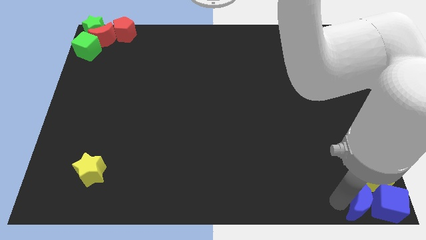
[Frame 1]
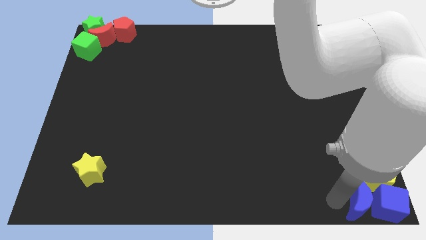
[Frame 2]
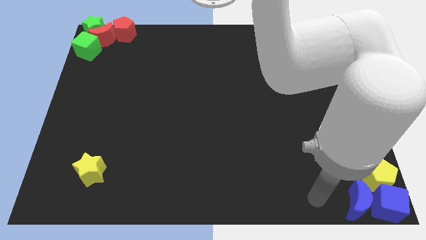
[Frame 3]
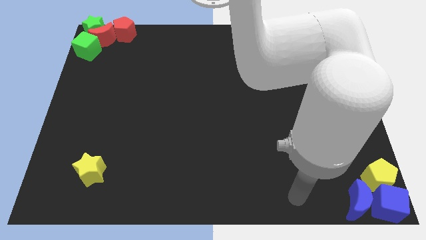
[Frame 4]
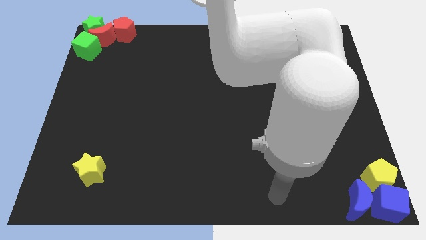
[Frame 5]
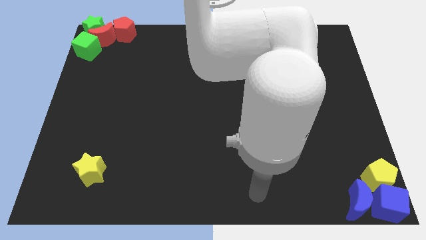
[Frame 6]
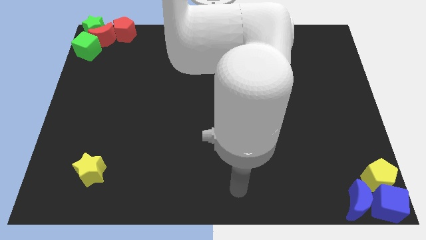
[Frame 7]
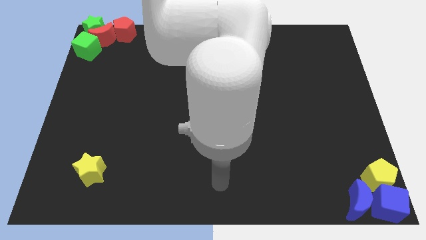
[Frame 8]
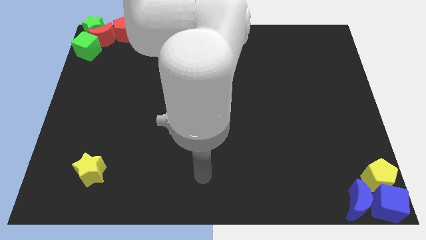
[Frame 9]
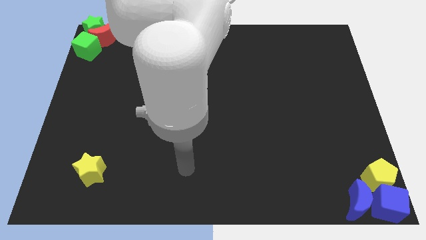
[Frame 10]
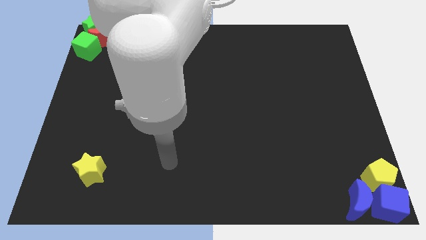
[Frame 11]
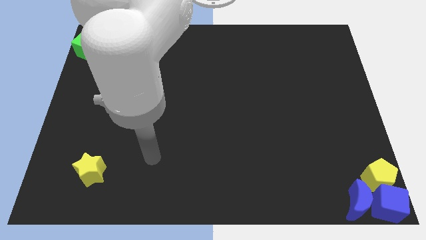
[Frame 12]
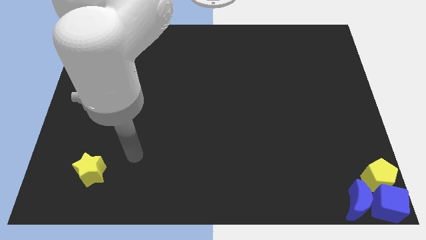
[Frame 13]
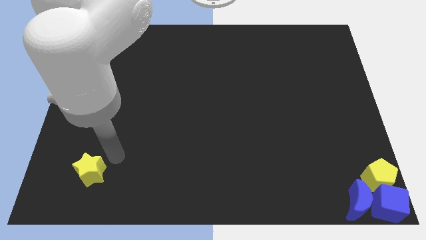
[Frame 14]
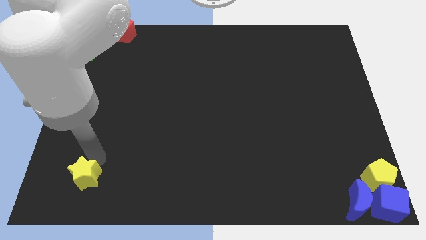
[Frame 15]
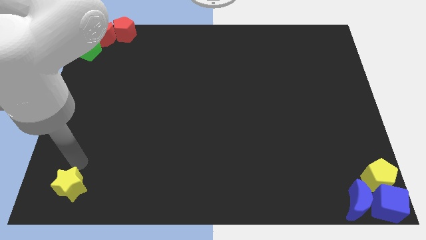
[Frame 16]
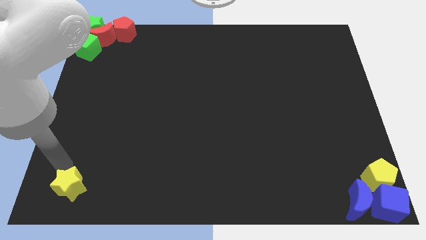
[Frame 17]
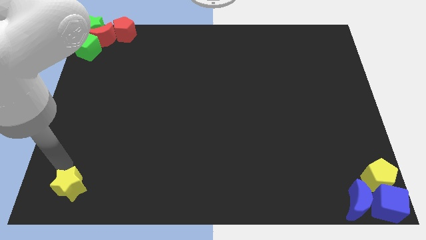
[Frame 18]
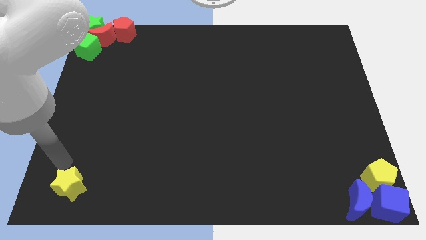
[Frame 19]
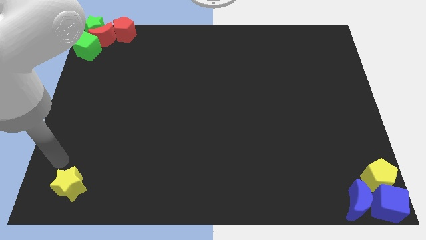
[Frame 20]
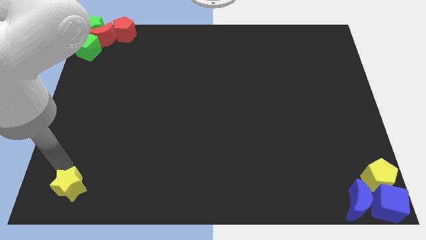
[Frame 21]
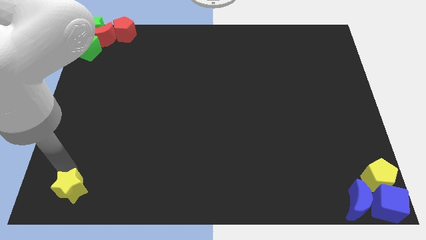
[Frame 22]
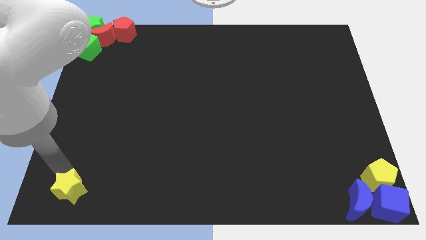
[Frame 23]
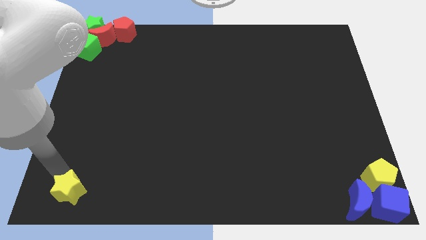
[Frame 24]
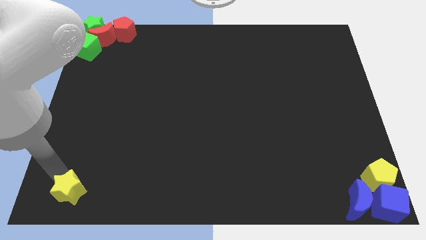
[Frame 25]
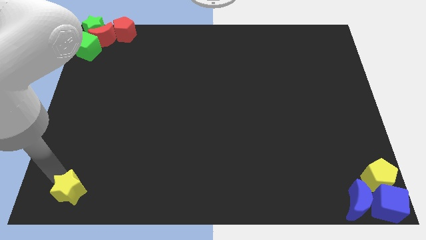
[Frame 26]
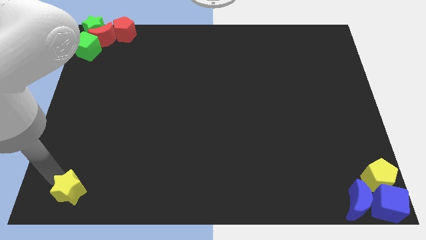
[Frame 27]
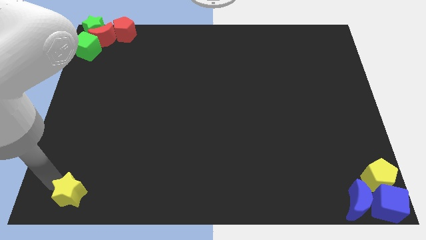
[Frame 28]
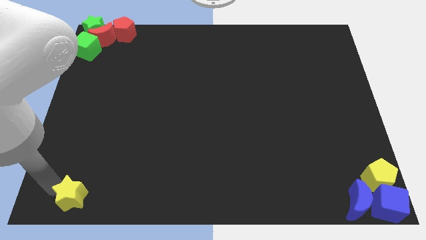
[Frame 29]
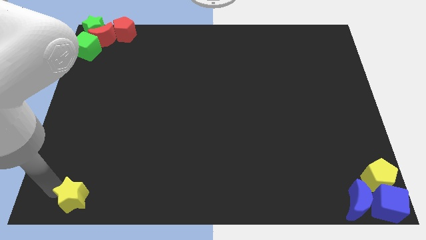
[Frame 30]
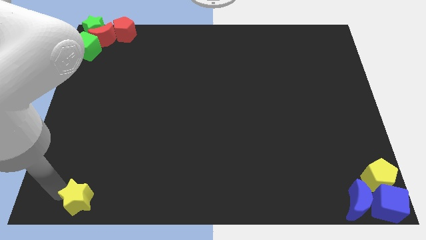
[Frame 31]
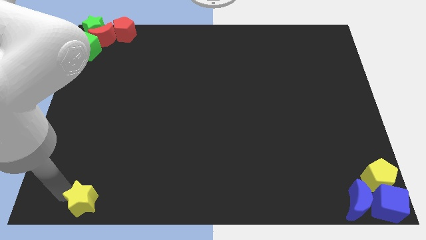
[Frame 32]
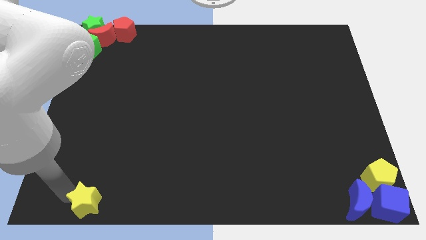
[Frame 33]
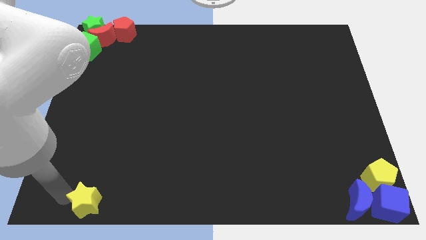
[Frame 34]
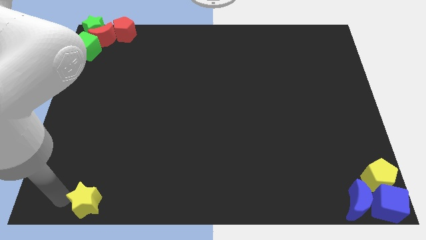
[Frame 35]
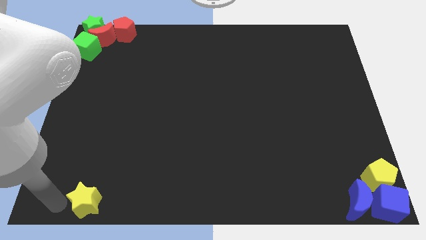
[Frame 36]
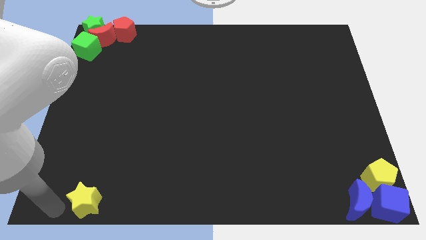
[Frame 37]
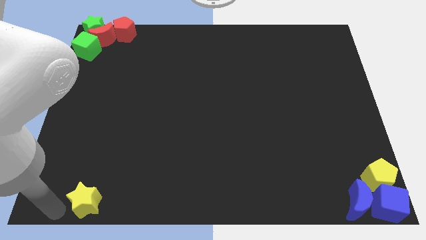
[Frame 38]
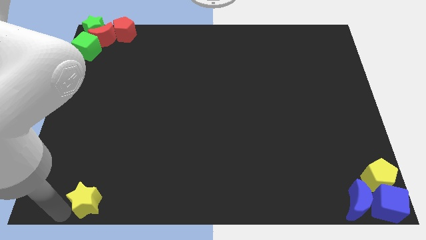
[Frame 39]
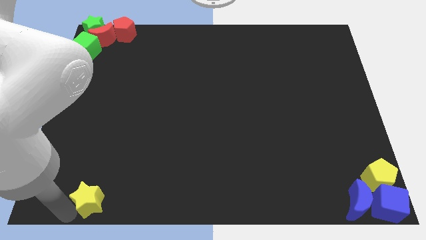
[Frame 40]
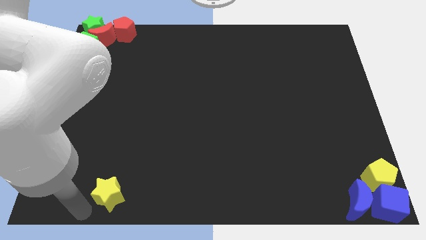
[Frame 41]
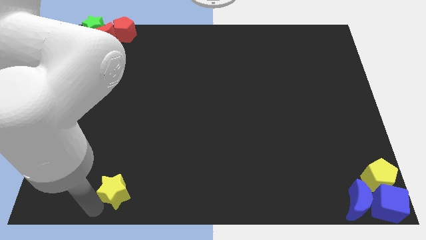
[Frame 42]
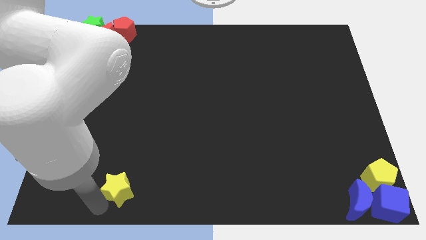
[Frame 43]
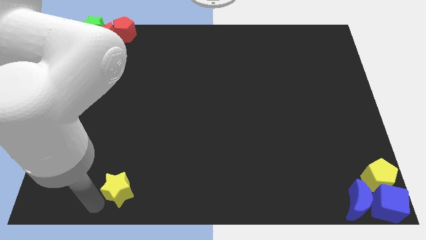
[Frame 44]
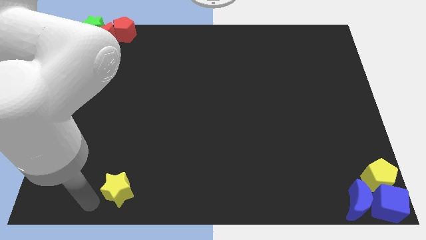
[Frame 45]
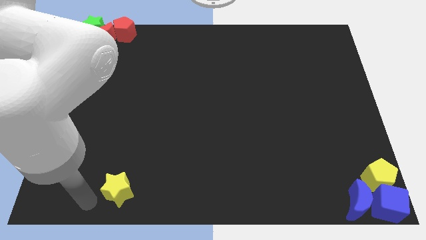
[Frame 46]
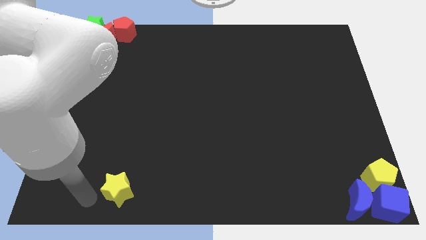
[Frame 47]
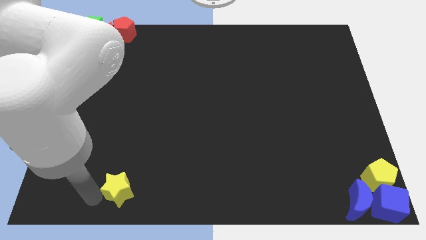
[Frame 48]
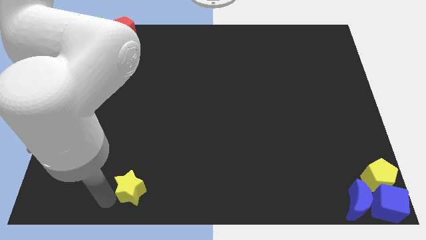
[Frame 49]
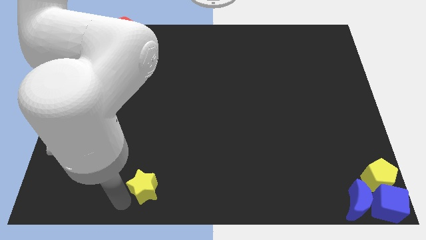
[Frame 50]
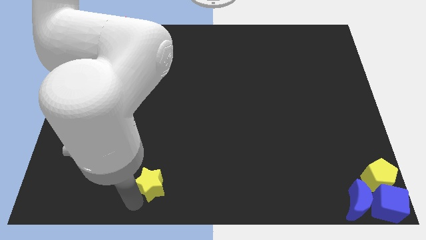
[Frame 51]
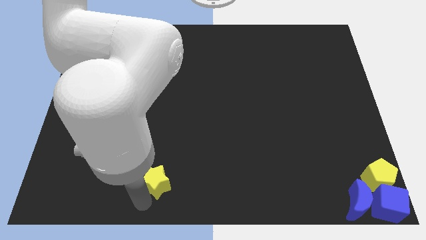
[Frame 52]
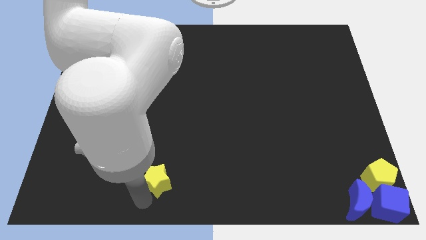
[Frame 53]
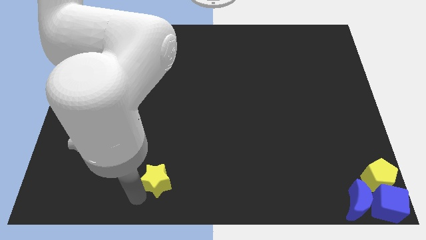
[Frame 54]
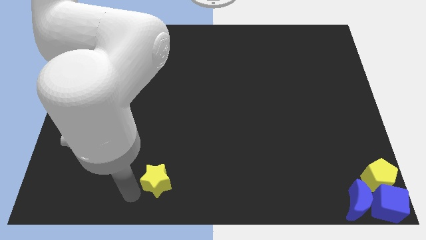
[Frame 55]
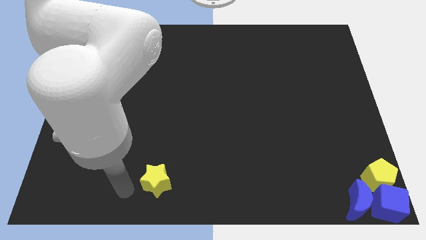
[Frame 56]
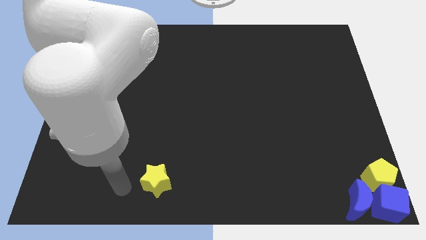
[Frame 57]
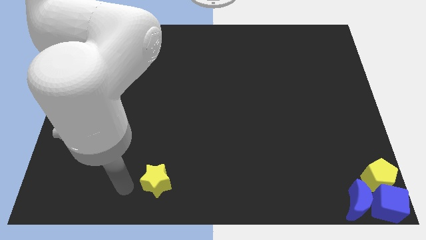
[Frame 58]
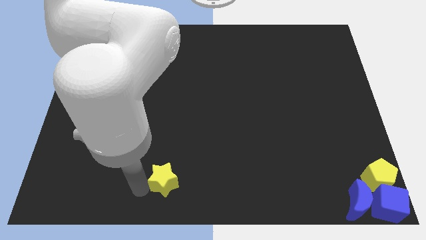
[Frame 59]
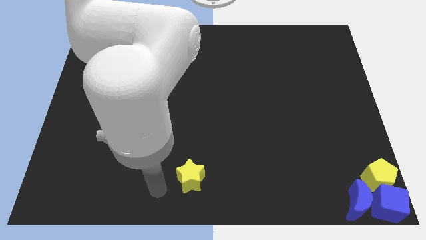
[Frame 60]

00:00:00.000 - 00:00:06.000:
push the yellow star to bottom right

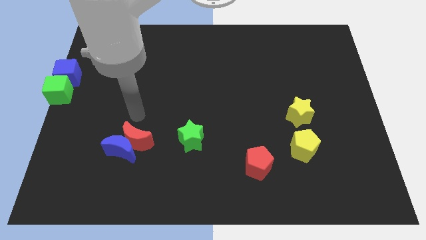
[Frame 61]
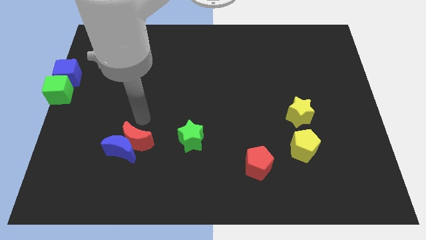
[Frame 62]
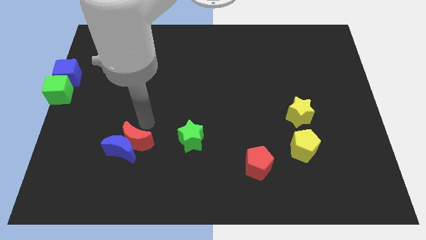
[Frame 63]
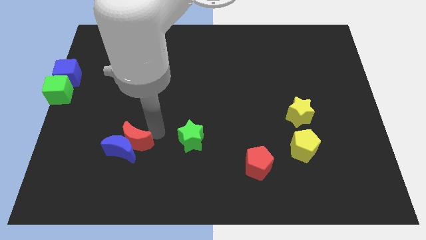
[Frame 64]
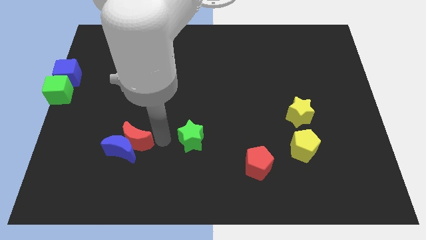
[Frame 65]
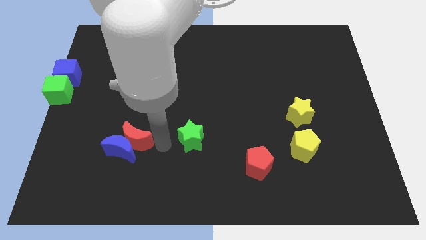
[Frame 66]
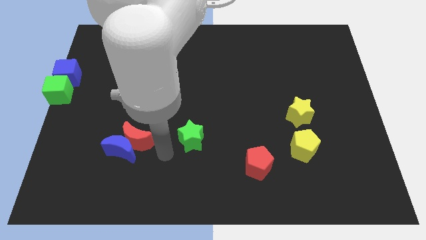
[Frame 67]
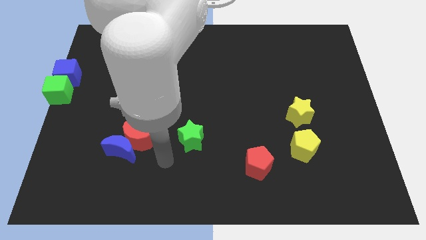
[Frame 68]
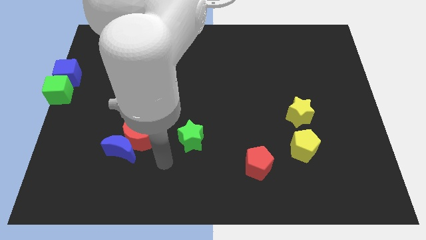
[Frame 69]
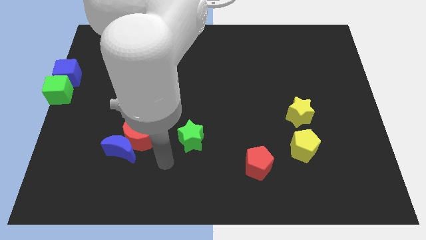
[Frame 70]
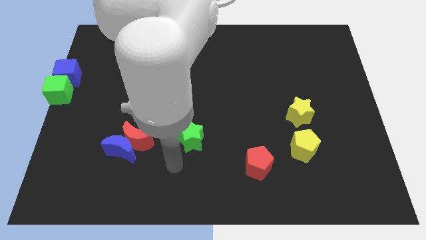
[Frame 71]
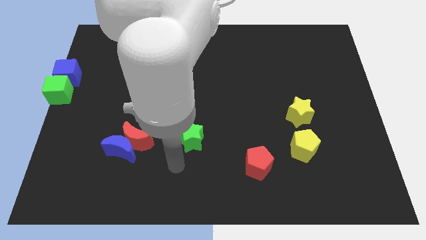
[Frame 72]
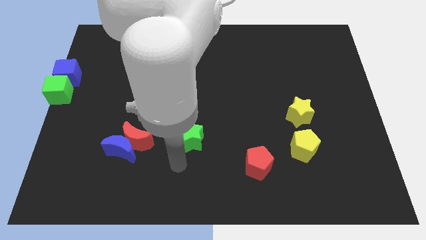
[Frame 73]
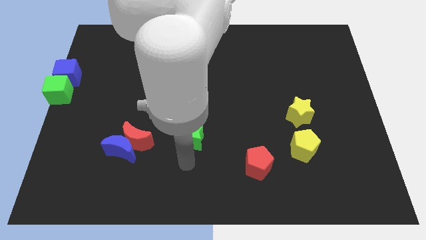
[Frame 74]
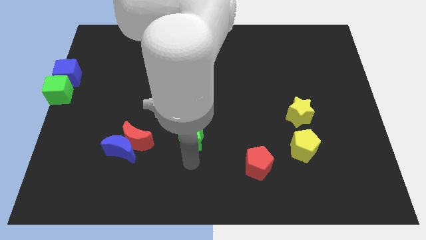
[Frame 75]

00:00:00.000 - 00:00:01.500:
point your arm at the bottom of the green star

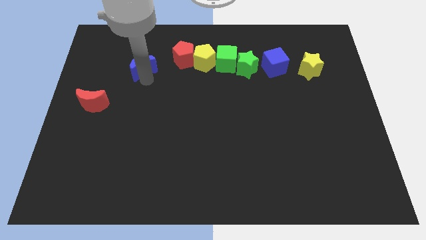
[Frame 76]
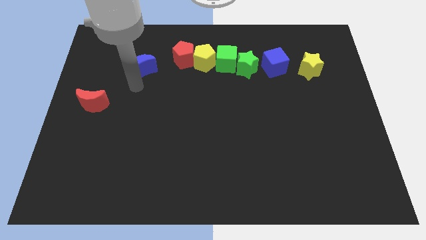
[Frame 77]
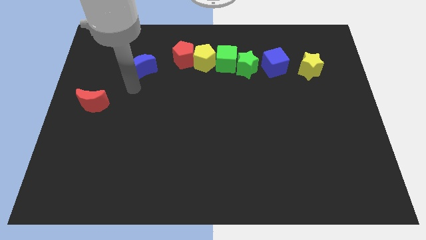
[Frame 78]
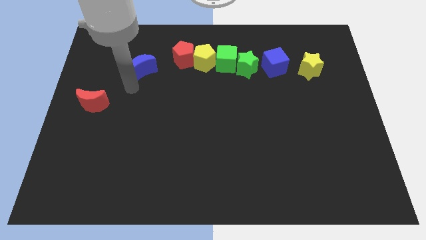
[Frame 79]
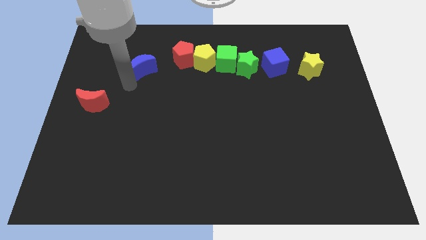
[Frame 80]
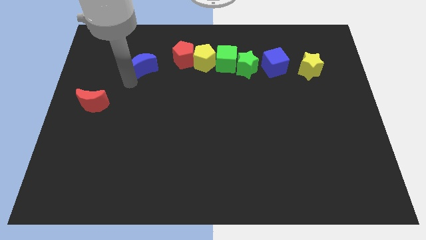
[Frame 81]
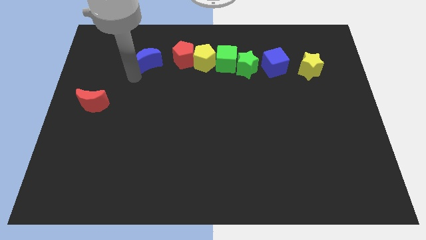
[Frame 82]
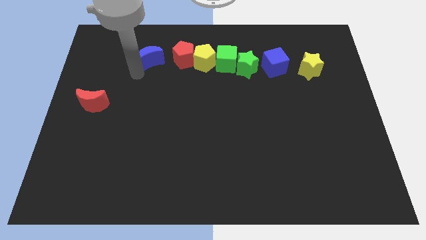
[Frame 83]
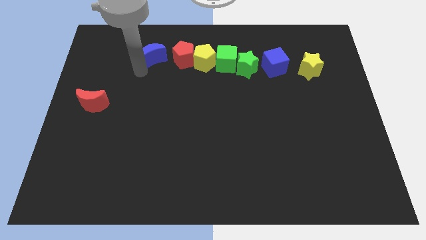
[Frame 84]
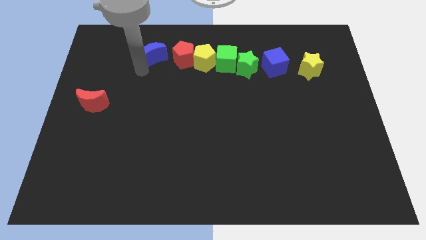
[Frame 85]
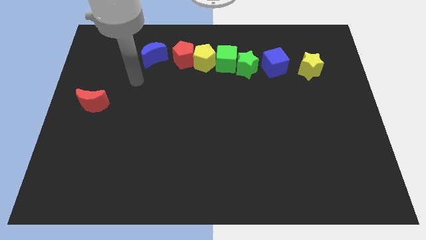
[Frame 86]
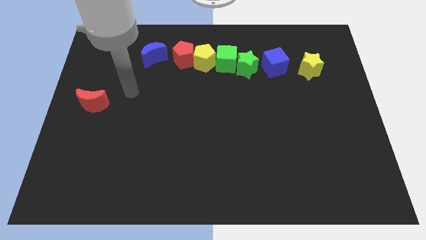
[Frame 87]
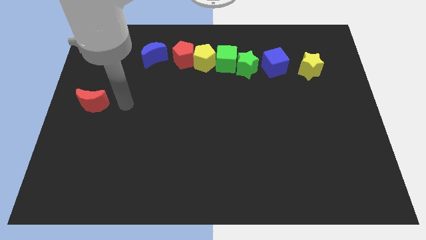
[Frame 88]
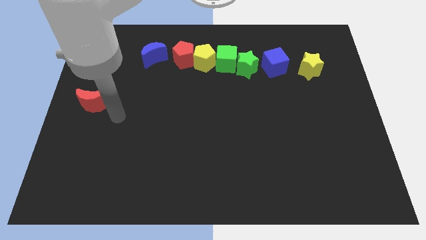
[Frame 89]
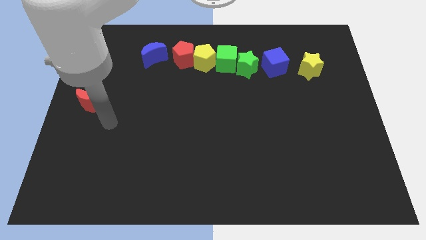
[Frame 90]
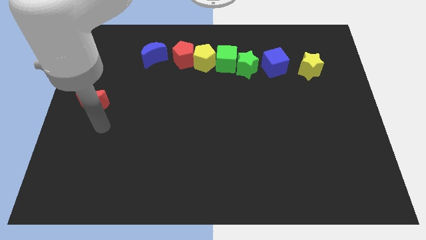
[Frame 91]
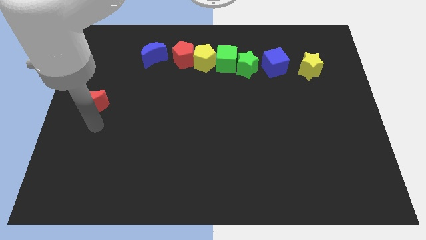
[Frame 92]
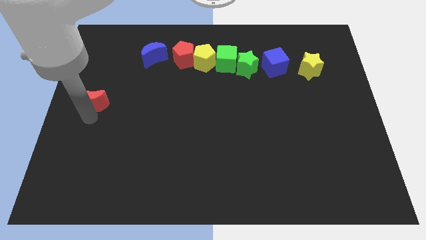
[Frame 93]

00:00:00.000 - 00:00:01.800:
slide the blue moon towards the top side
